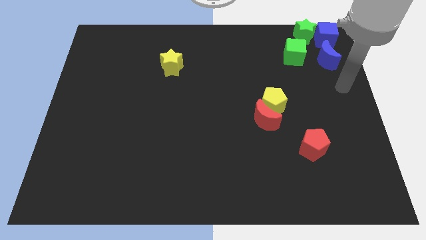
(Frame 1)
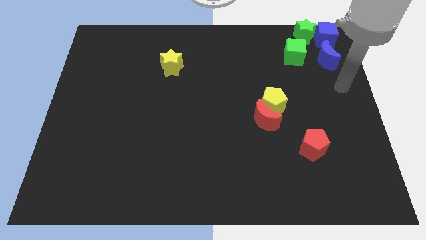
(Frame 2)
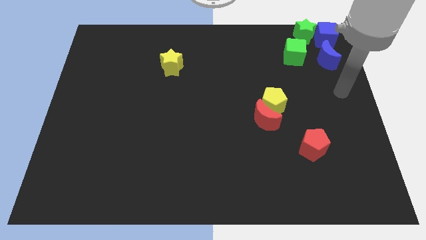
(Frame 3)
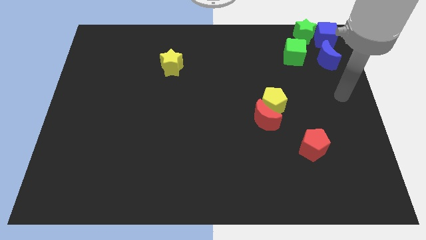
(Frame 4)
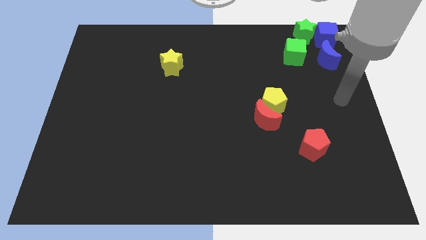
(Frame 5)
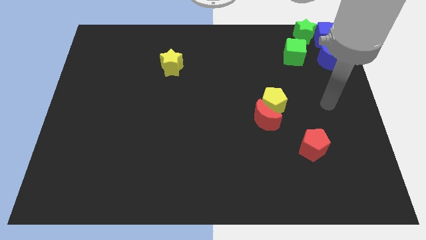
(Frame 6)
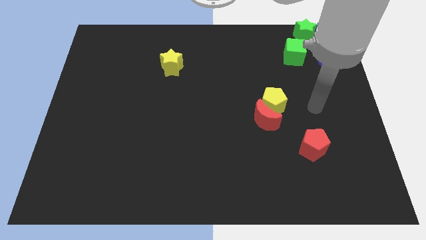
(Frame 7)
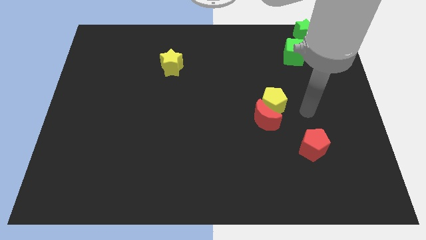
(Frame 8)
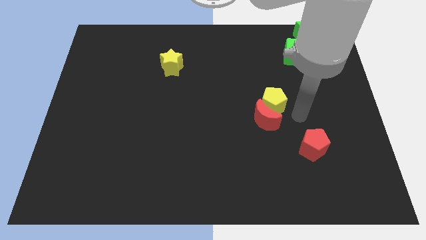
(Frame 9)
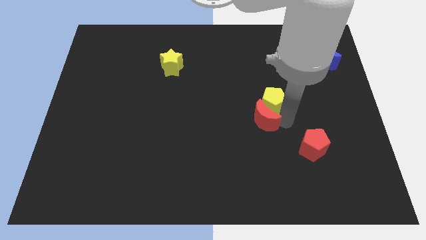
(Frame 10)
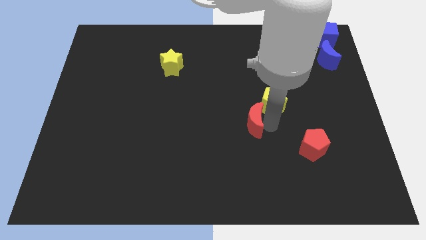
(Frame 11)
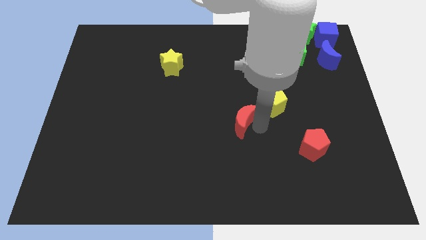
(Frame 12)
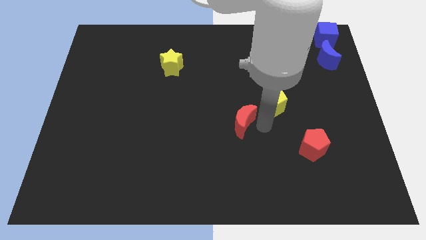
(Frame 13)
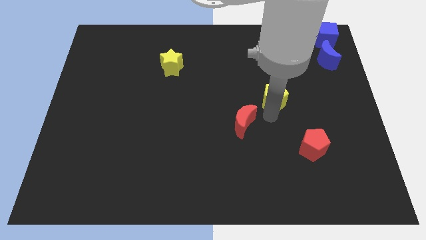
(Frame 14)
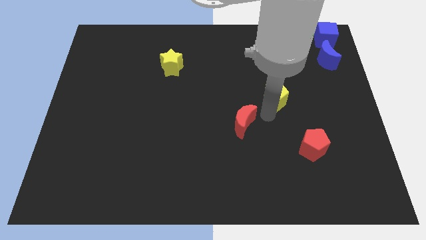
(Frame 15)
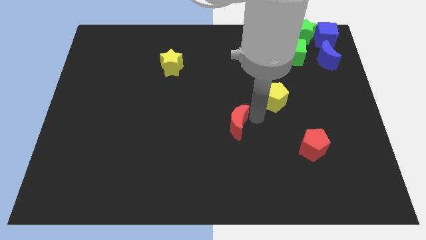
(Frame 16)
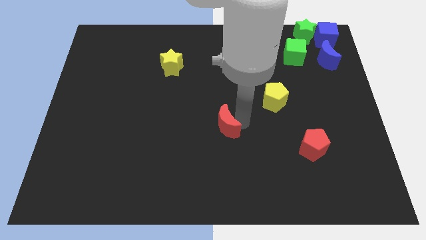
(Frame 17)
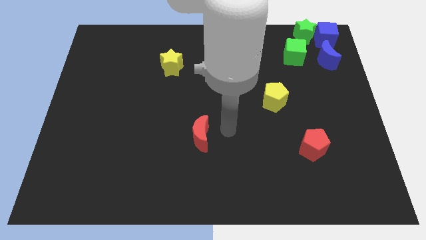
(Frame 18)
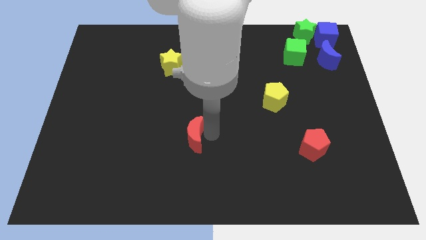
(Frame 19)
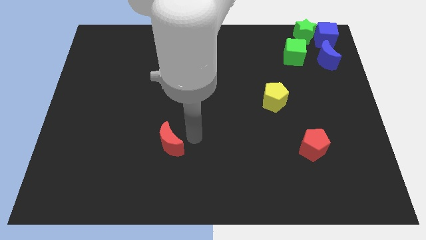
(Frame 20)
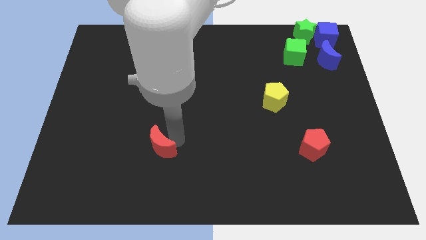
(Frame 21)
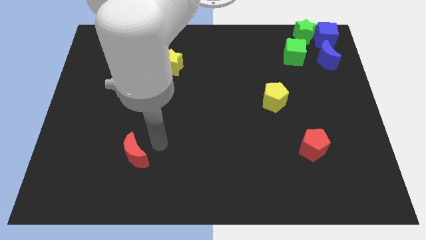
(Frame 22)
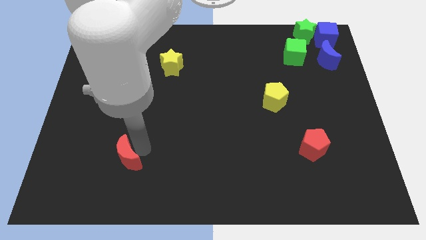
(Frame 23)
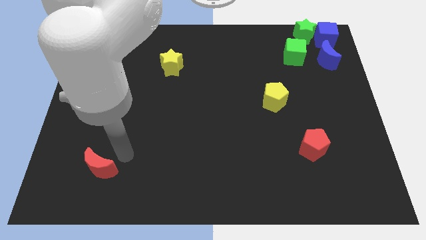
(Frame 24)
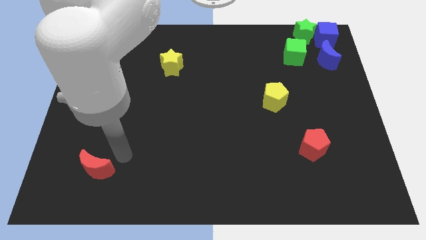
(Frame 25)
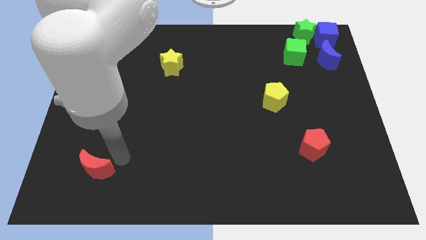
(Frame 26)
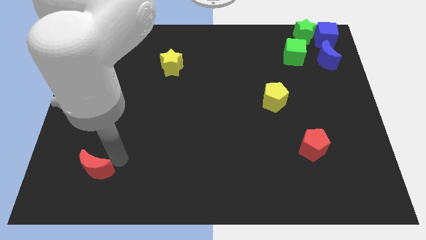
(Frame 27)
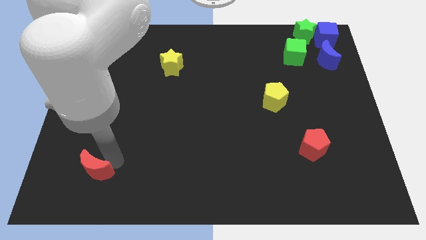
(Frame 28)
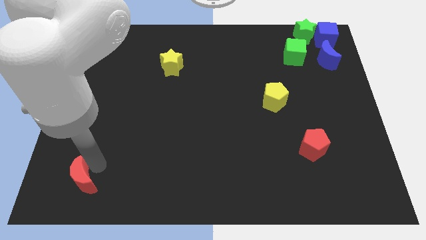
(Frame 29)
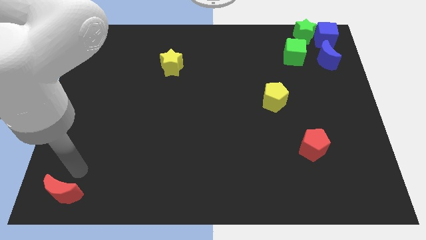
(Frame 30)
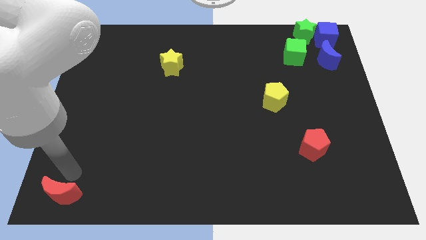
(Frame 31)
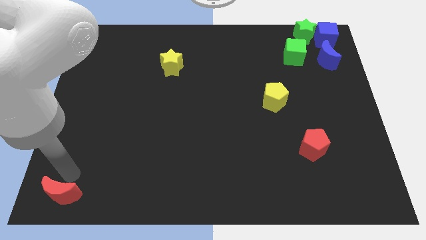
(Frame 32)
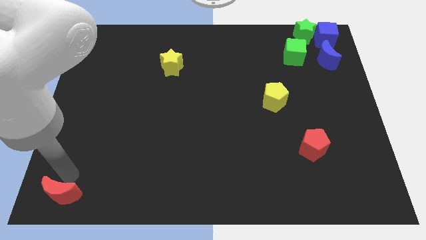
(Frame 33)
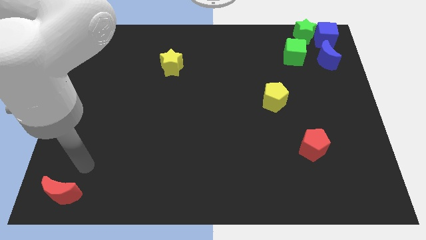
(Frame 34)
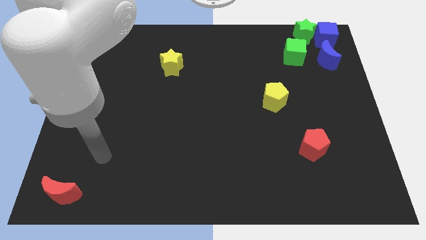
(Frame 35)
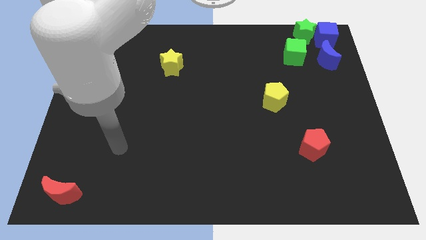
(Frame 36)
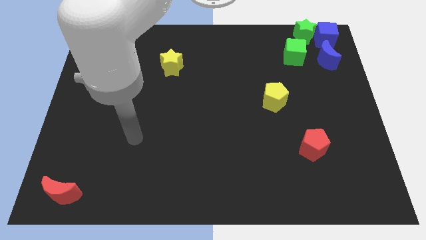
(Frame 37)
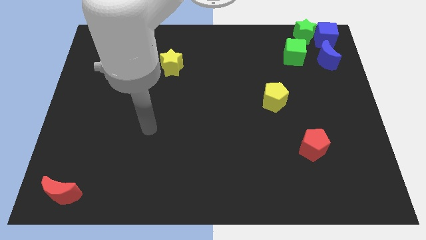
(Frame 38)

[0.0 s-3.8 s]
move the red moon to the bottom left corner

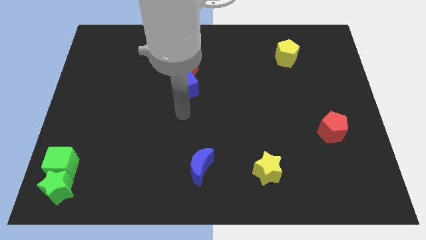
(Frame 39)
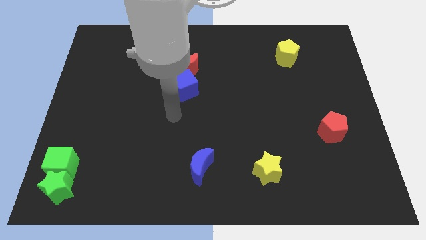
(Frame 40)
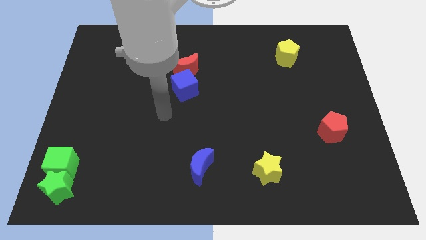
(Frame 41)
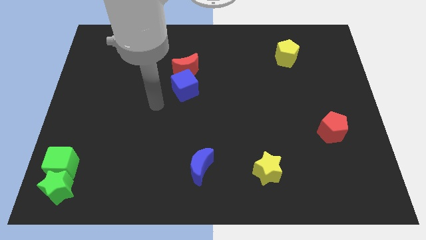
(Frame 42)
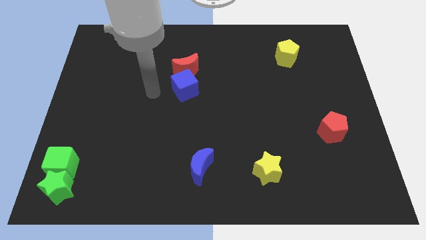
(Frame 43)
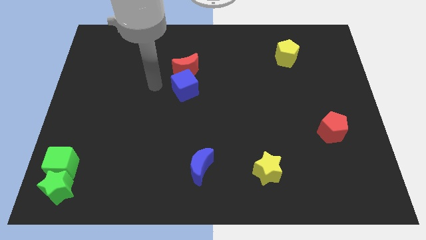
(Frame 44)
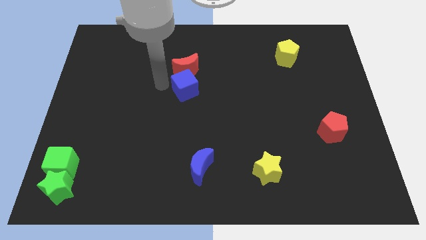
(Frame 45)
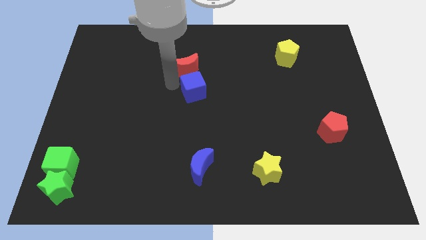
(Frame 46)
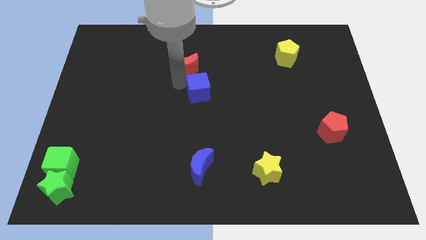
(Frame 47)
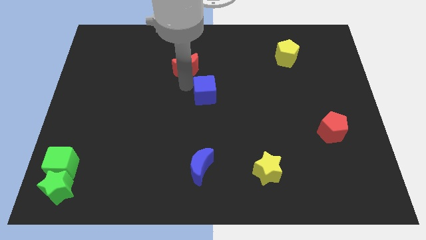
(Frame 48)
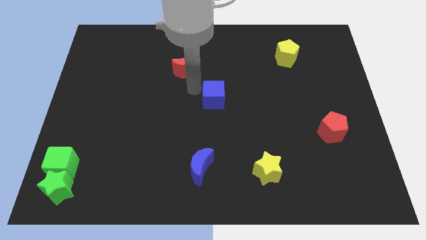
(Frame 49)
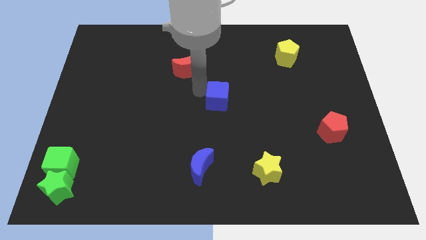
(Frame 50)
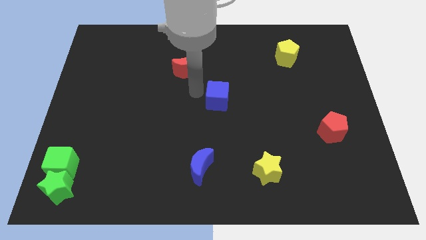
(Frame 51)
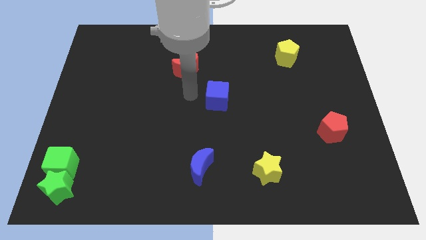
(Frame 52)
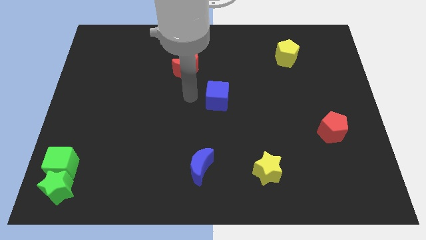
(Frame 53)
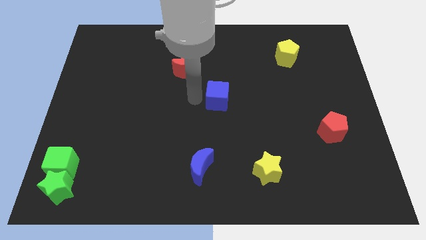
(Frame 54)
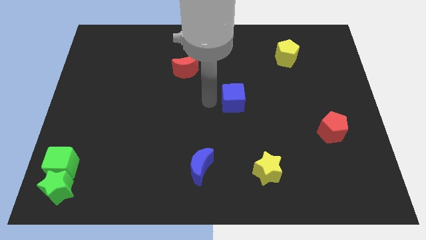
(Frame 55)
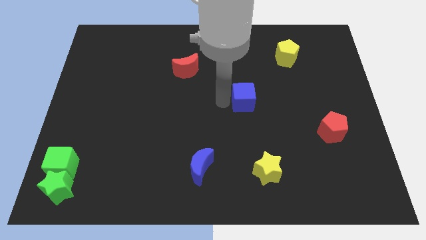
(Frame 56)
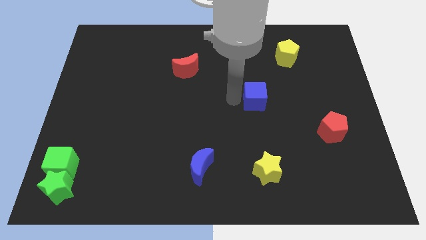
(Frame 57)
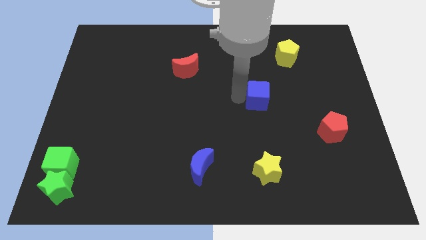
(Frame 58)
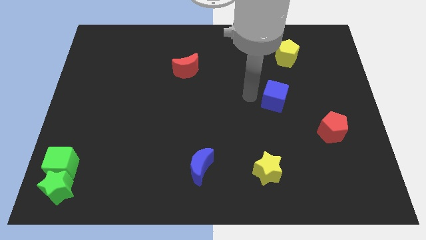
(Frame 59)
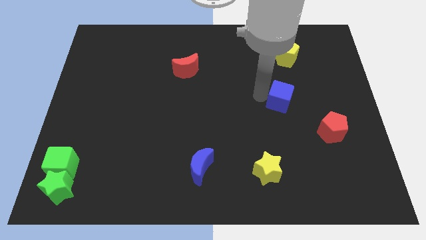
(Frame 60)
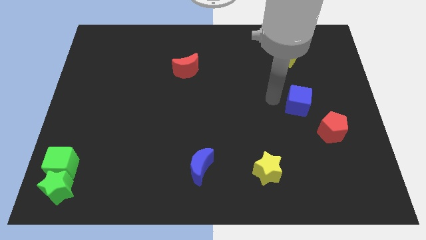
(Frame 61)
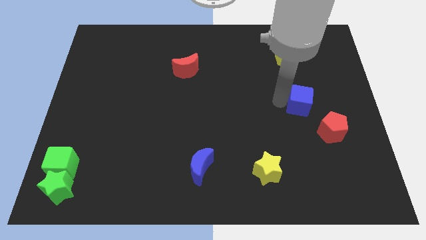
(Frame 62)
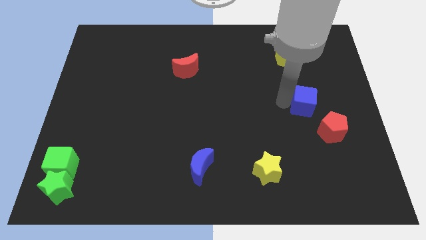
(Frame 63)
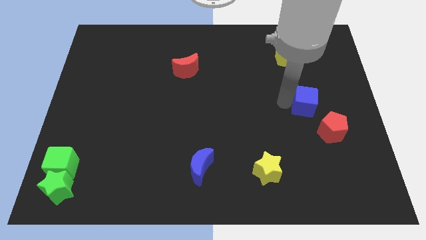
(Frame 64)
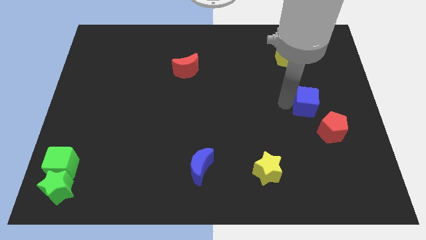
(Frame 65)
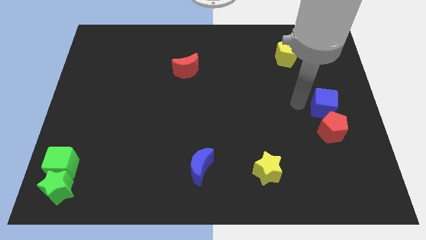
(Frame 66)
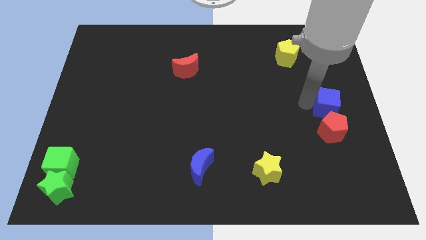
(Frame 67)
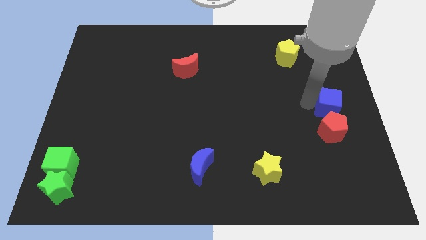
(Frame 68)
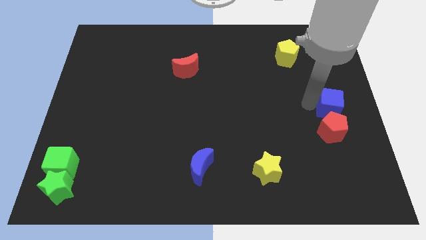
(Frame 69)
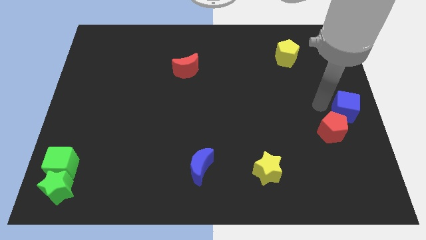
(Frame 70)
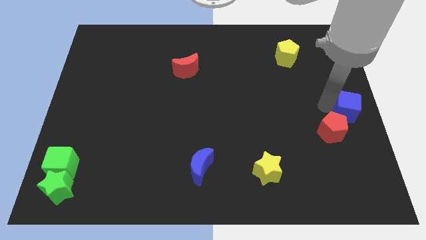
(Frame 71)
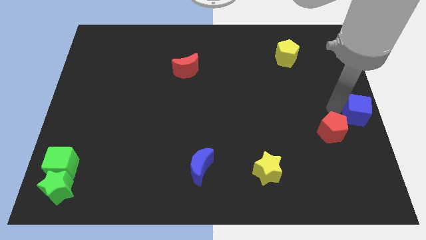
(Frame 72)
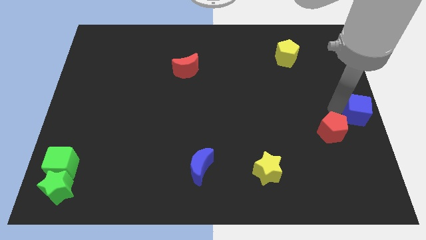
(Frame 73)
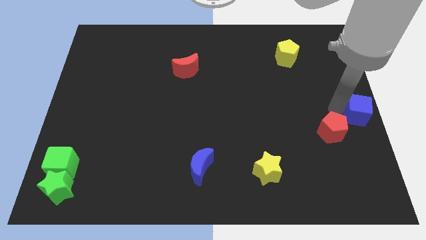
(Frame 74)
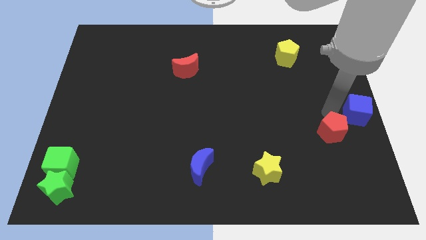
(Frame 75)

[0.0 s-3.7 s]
place the blue cube at the right center of the board

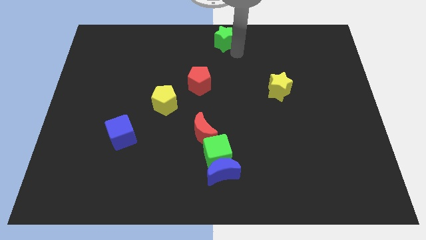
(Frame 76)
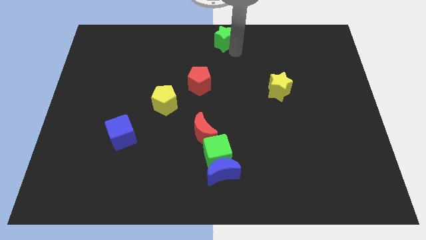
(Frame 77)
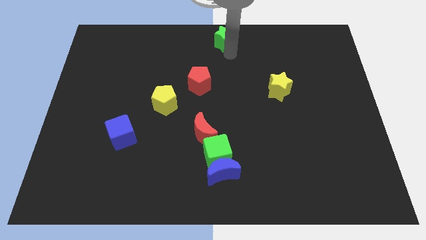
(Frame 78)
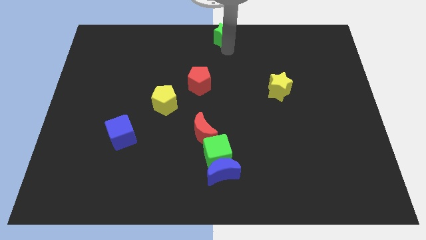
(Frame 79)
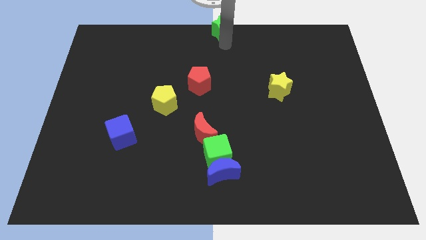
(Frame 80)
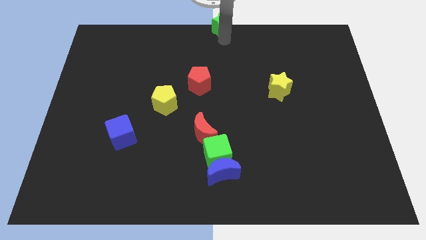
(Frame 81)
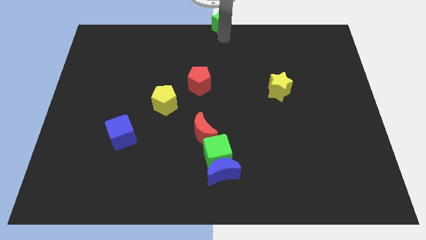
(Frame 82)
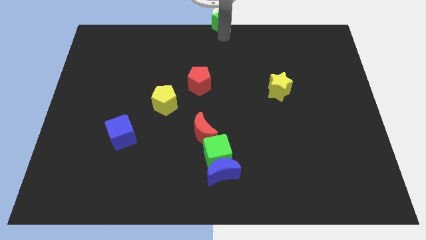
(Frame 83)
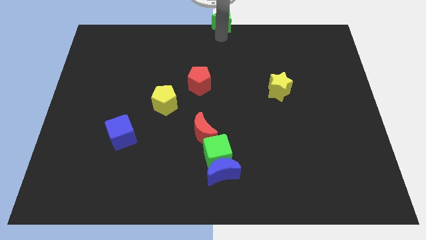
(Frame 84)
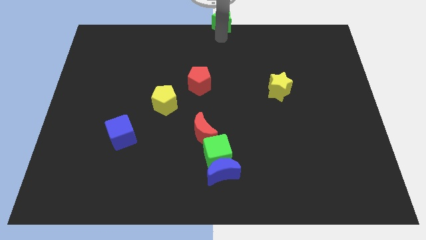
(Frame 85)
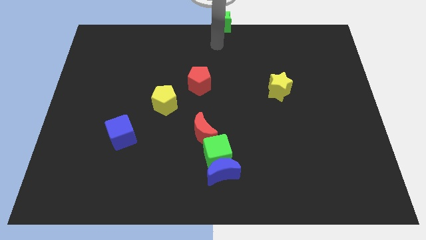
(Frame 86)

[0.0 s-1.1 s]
place the green star at the top center of the board

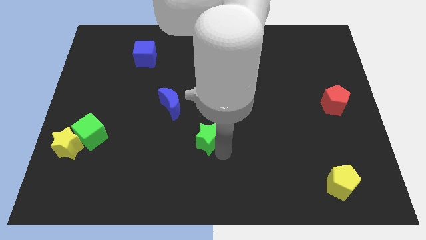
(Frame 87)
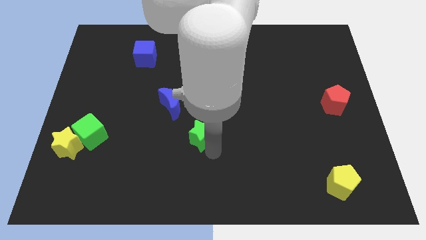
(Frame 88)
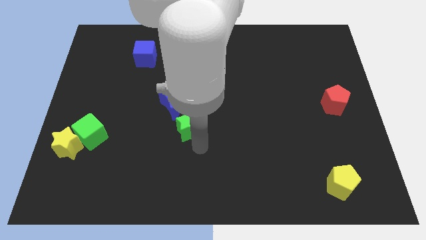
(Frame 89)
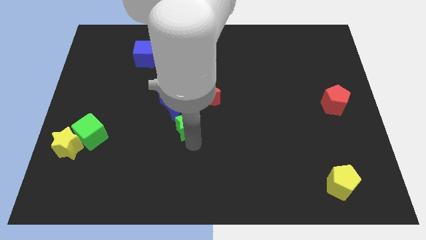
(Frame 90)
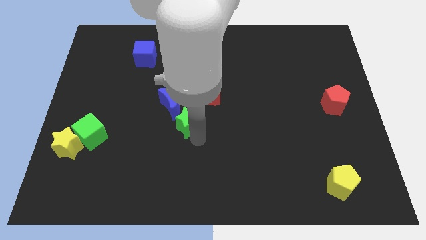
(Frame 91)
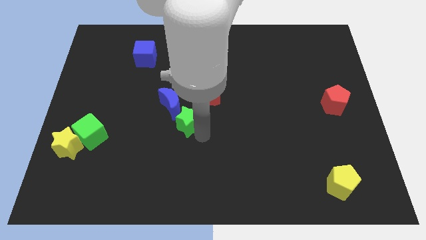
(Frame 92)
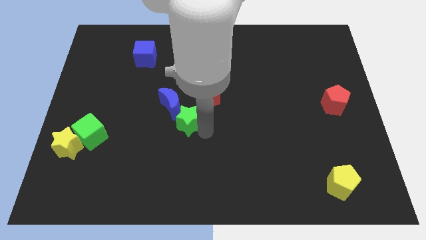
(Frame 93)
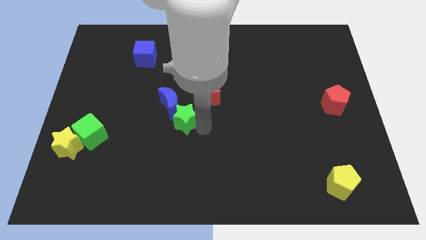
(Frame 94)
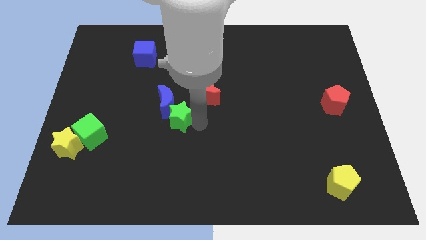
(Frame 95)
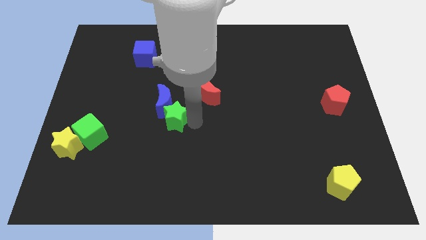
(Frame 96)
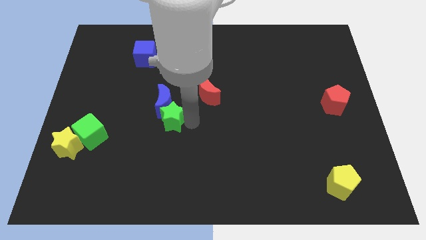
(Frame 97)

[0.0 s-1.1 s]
move green star into blue moon
